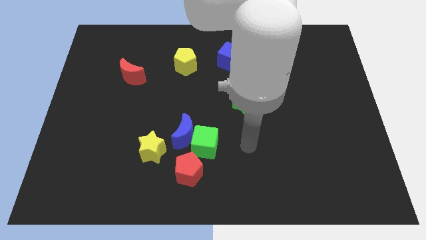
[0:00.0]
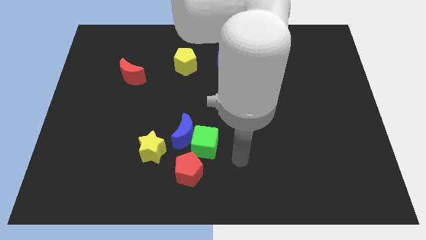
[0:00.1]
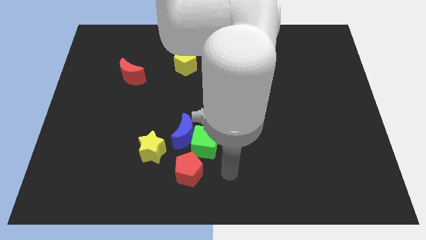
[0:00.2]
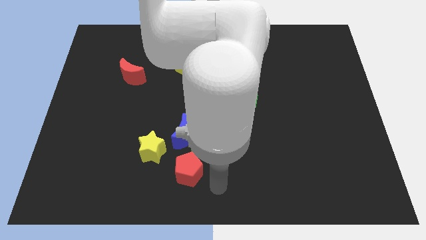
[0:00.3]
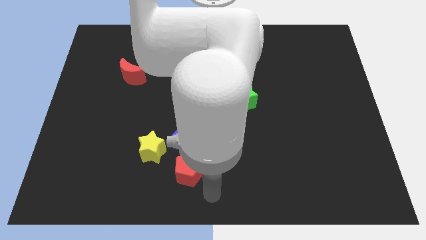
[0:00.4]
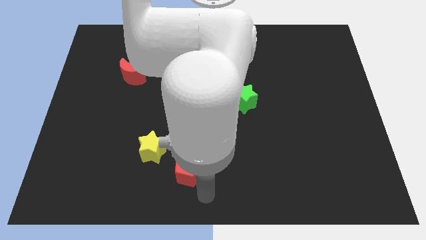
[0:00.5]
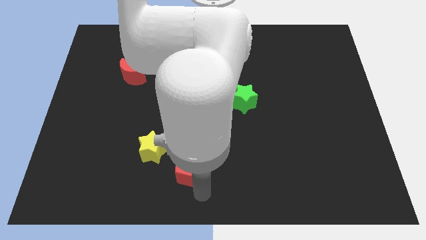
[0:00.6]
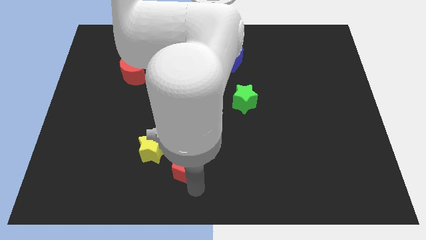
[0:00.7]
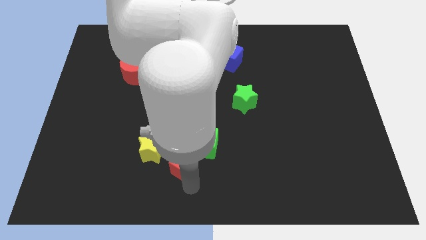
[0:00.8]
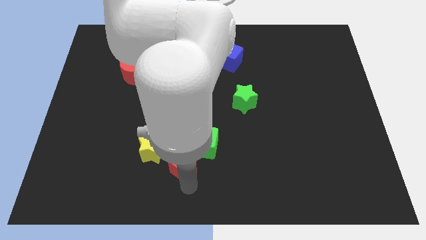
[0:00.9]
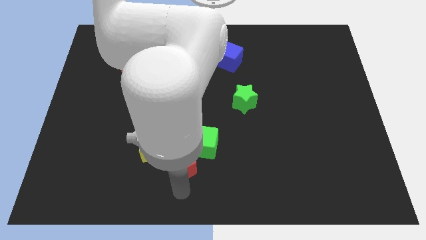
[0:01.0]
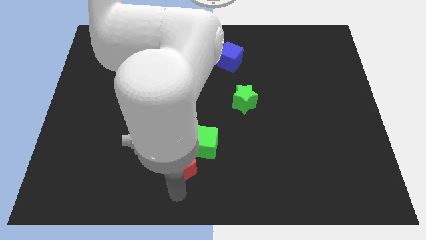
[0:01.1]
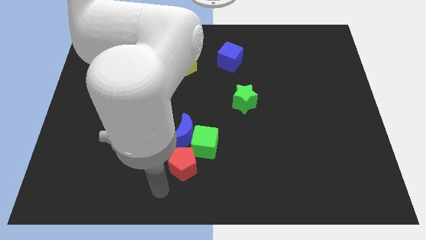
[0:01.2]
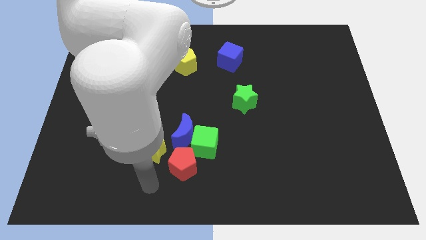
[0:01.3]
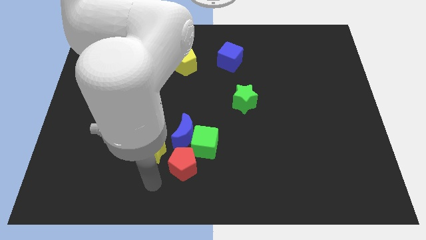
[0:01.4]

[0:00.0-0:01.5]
add the red pentagon to the group of blocks at the bottom side of the board

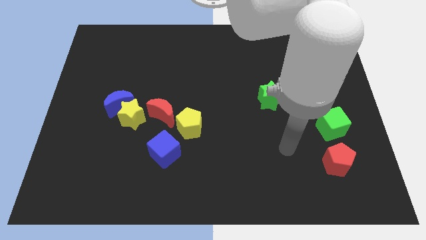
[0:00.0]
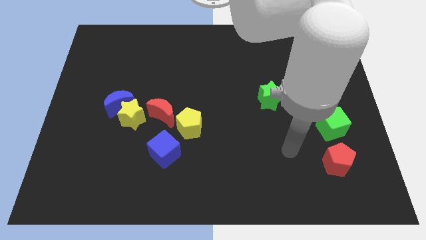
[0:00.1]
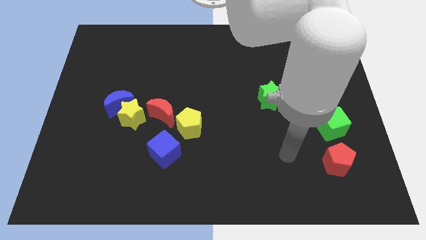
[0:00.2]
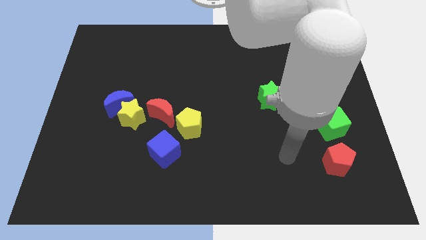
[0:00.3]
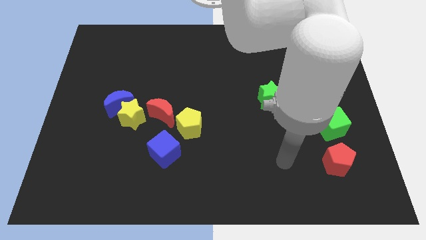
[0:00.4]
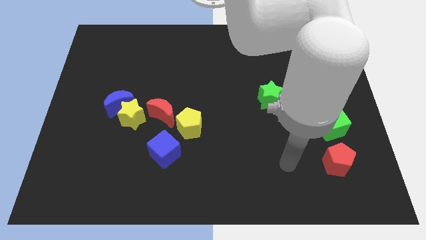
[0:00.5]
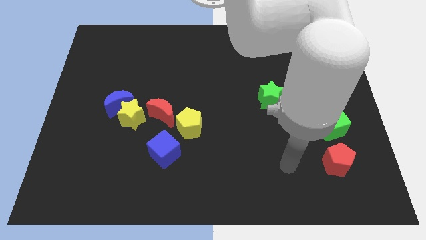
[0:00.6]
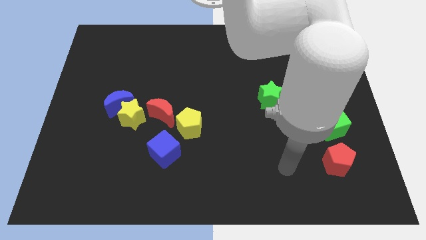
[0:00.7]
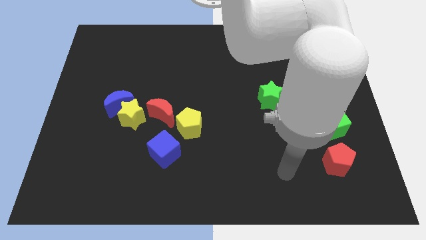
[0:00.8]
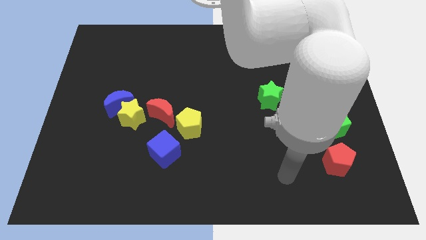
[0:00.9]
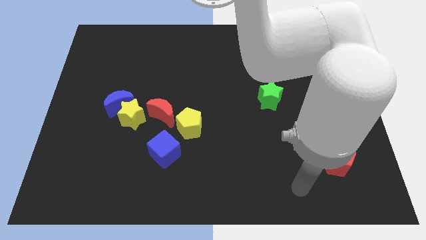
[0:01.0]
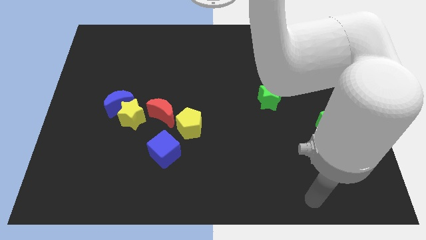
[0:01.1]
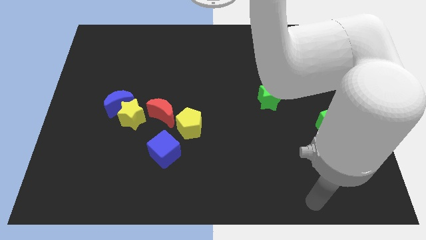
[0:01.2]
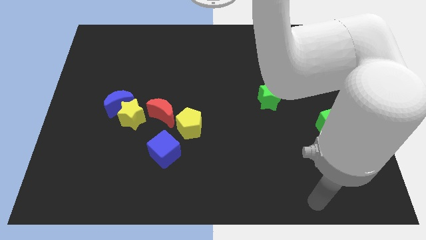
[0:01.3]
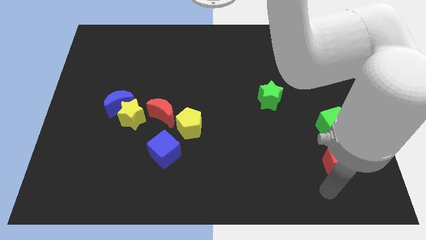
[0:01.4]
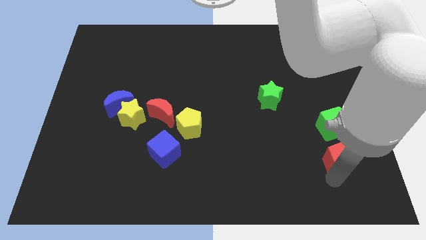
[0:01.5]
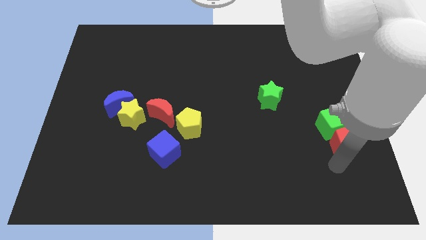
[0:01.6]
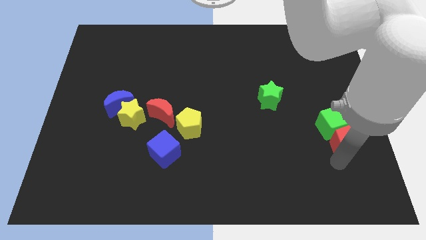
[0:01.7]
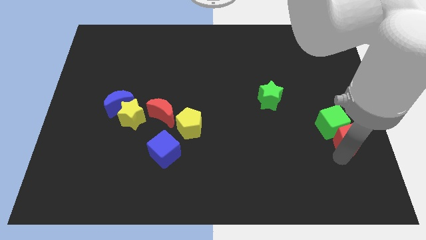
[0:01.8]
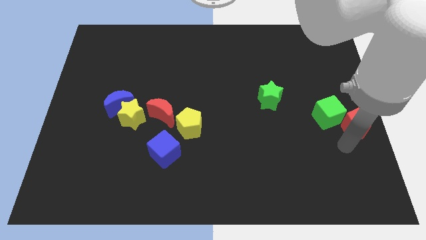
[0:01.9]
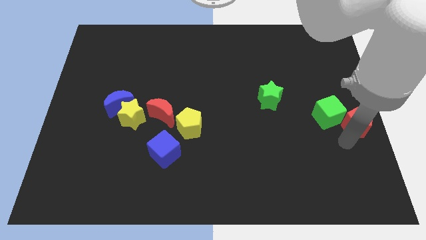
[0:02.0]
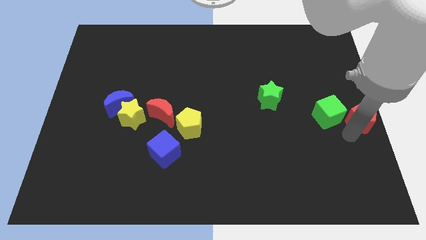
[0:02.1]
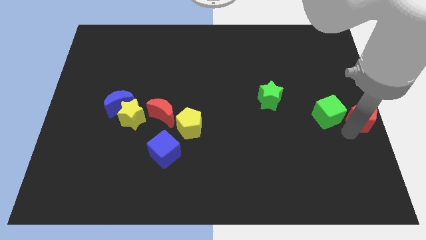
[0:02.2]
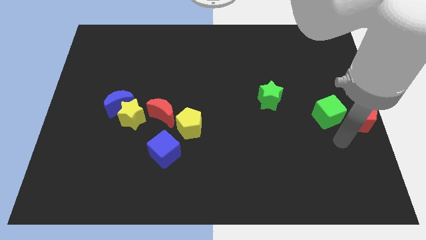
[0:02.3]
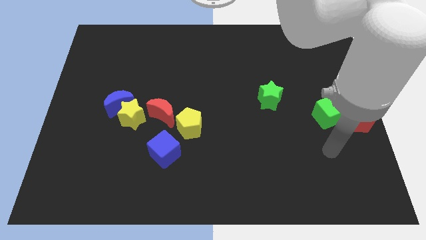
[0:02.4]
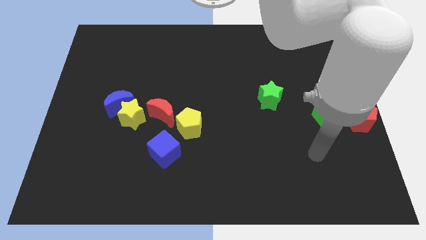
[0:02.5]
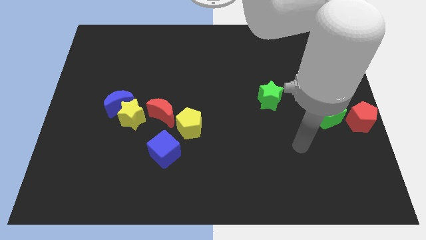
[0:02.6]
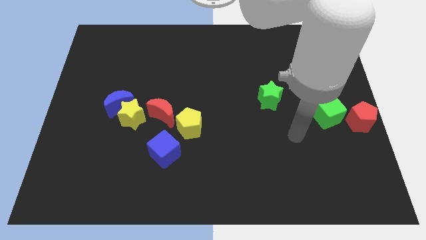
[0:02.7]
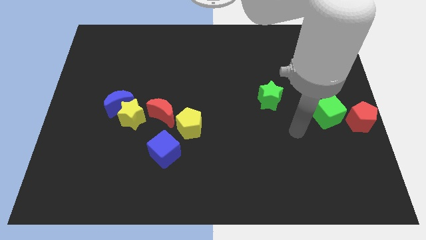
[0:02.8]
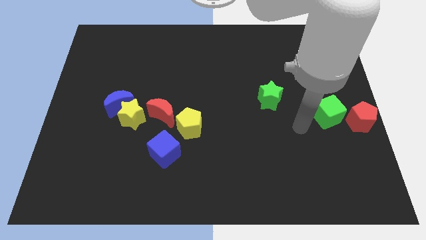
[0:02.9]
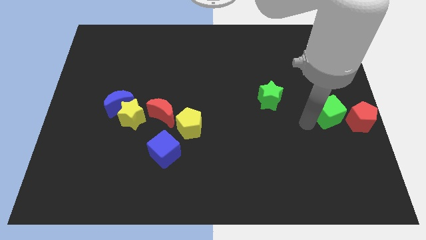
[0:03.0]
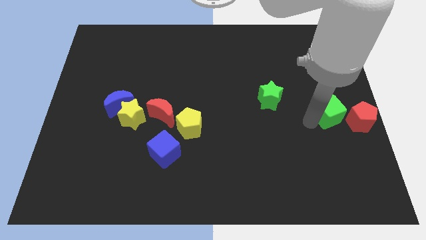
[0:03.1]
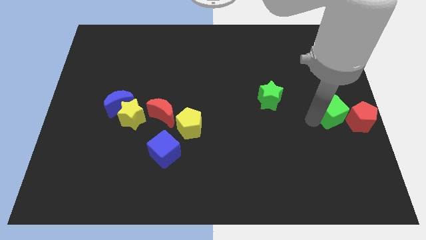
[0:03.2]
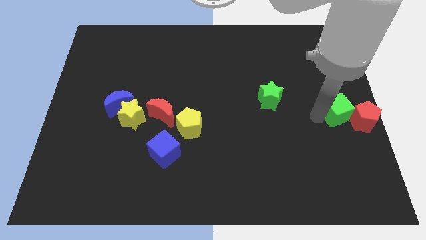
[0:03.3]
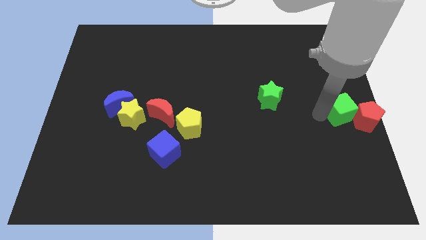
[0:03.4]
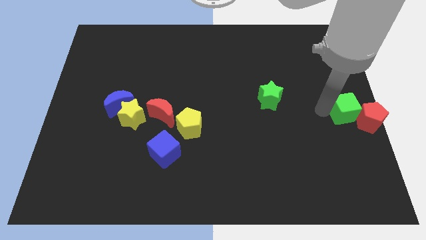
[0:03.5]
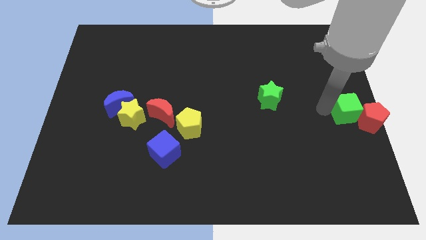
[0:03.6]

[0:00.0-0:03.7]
push the red pentagon and green cube to the right center of the board

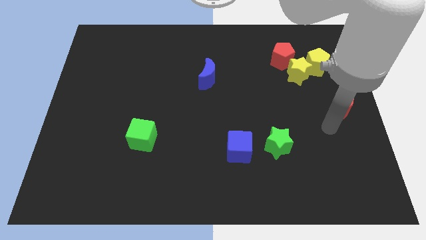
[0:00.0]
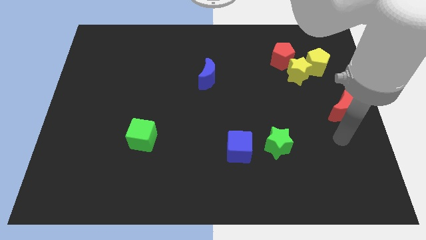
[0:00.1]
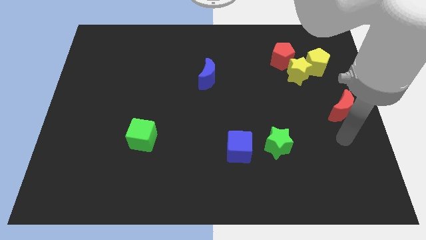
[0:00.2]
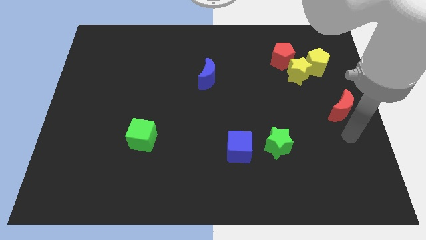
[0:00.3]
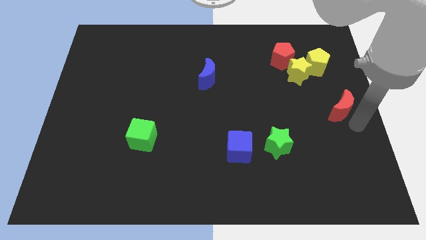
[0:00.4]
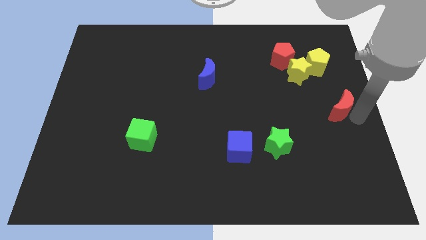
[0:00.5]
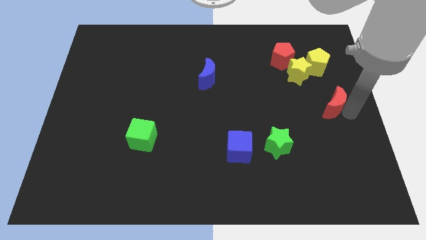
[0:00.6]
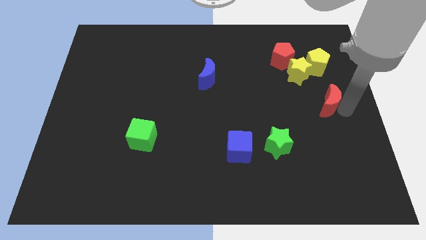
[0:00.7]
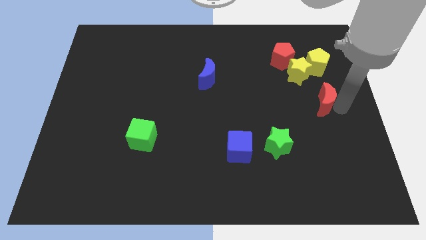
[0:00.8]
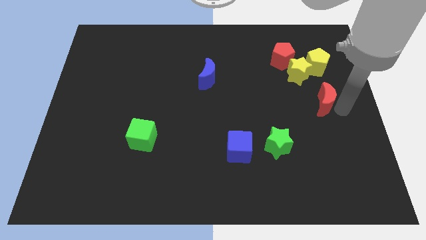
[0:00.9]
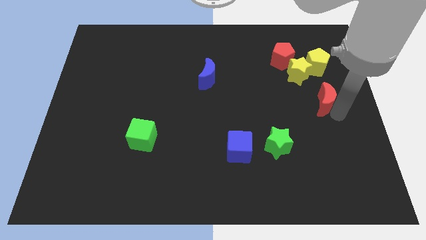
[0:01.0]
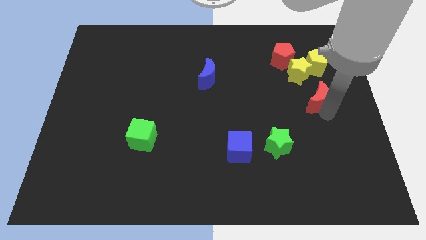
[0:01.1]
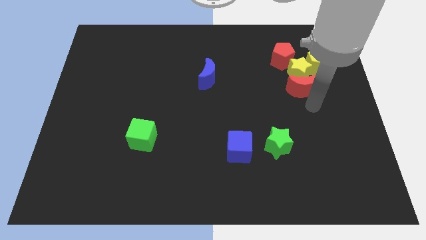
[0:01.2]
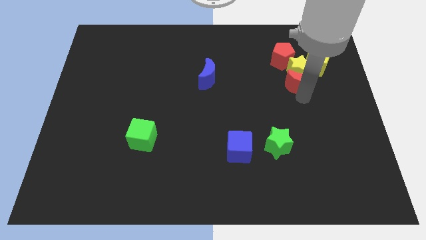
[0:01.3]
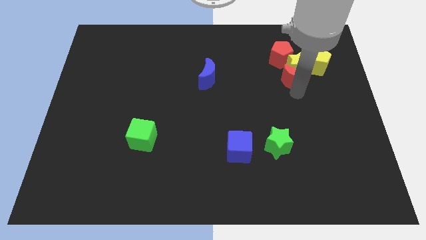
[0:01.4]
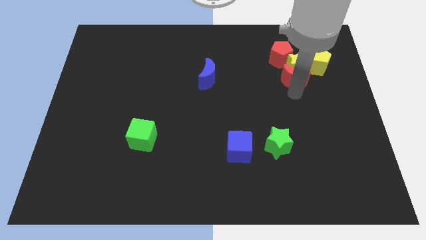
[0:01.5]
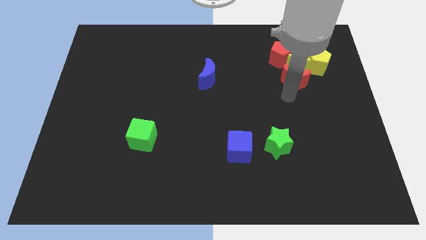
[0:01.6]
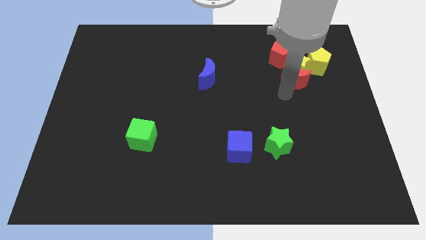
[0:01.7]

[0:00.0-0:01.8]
push the red moon into the group of blocks

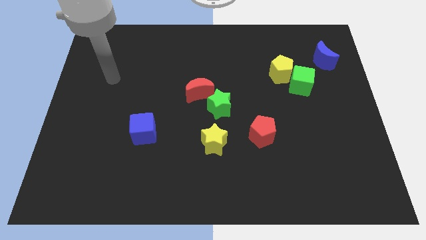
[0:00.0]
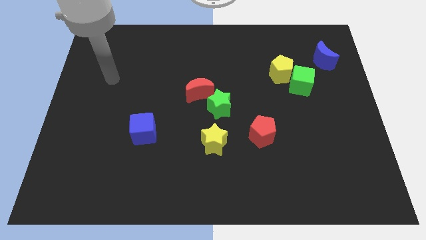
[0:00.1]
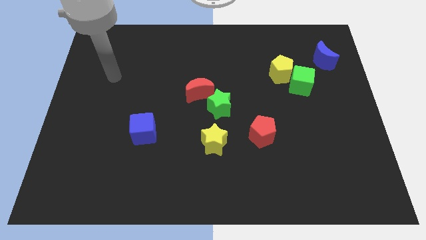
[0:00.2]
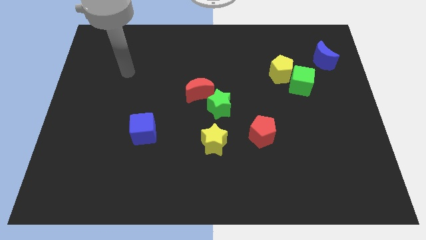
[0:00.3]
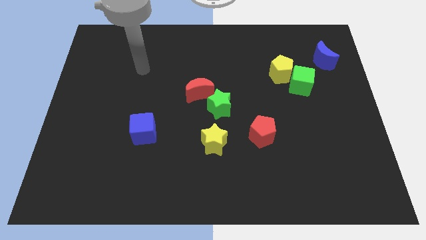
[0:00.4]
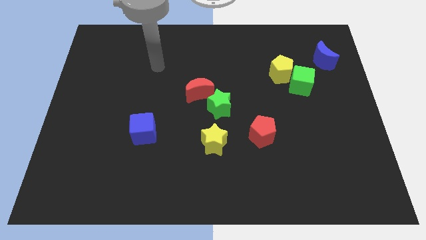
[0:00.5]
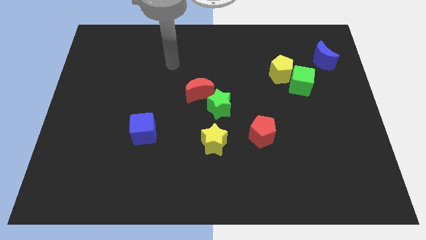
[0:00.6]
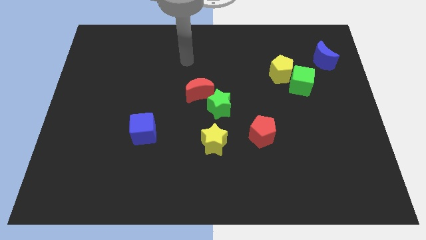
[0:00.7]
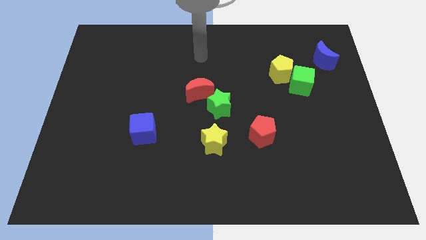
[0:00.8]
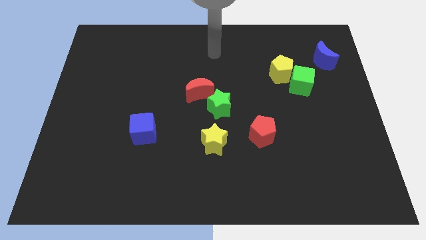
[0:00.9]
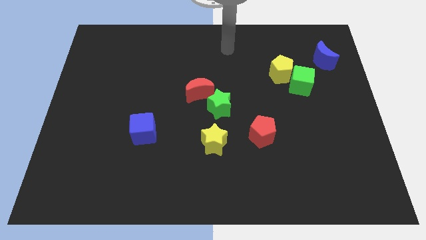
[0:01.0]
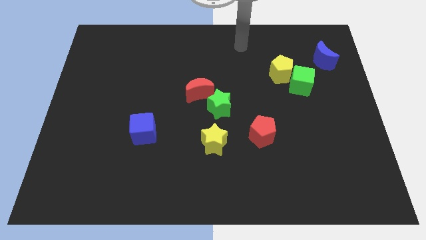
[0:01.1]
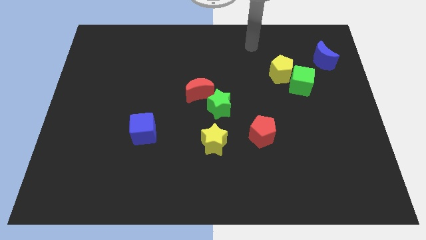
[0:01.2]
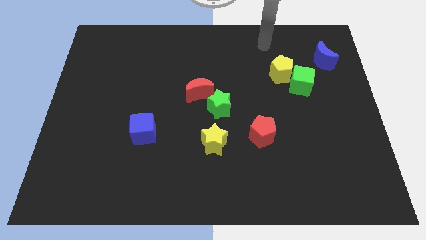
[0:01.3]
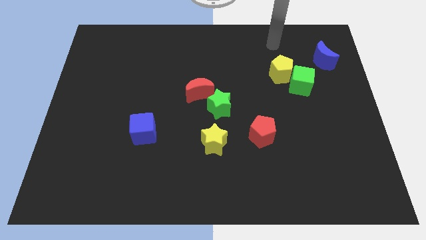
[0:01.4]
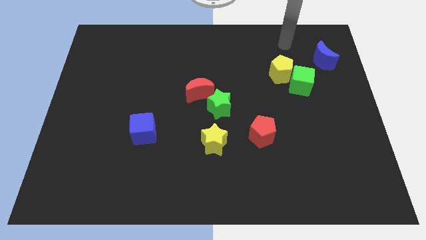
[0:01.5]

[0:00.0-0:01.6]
point your hand above the yellow pentagon

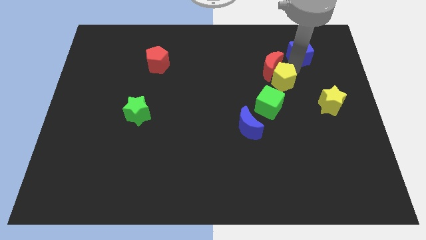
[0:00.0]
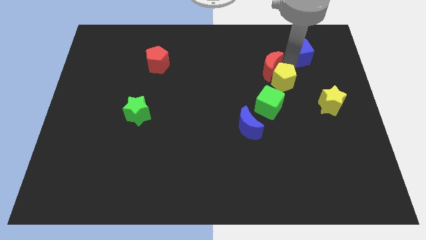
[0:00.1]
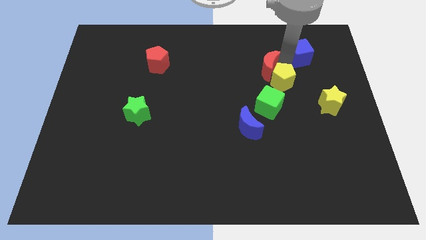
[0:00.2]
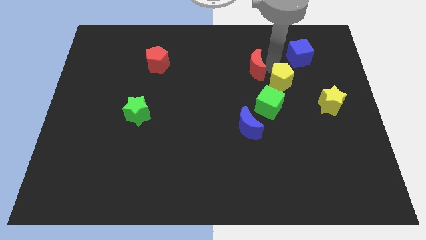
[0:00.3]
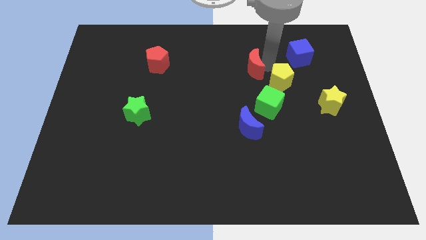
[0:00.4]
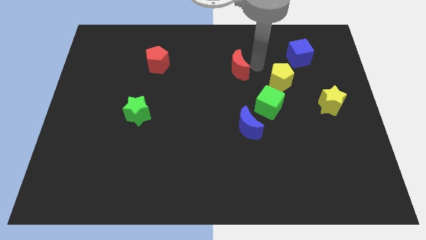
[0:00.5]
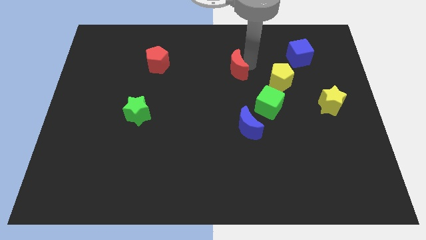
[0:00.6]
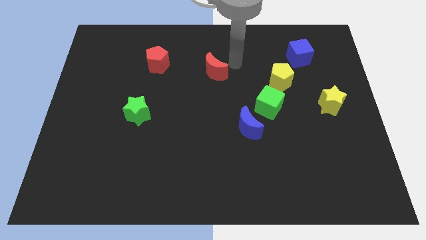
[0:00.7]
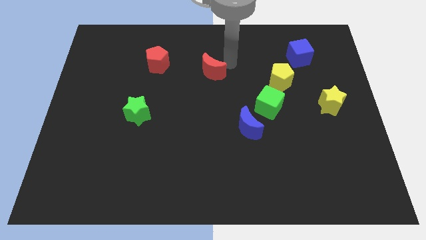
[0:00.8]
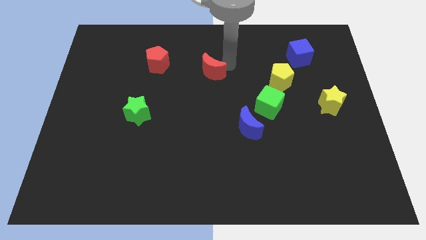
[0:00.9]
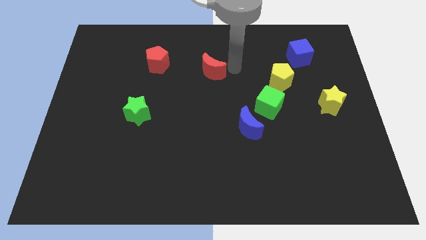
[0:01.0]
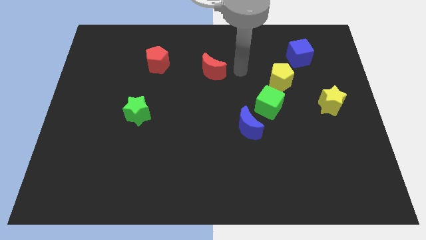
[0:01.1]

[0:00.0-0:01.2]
push the red moon away from the yellow pentagon
